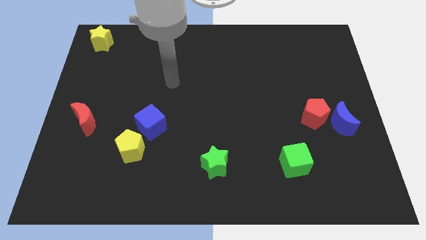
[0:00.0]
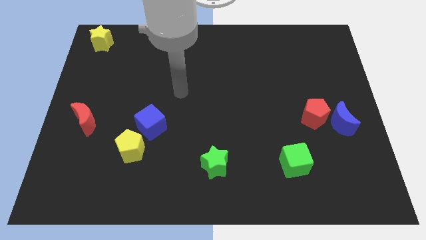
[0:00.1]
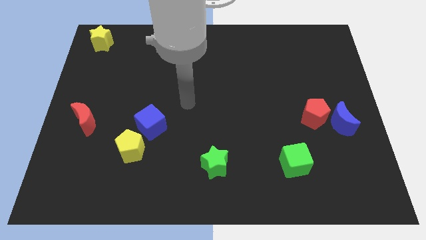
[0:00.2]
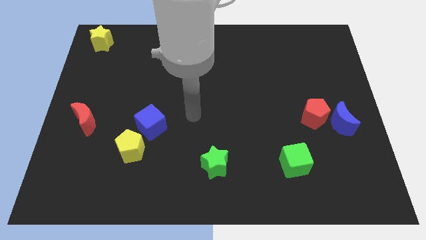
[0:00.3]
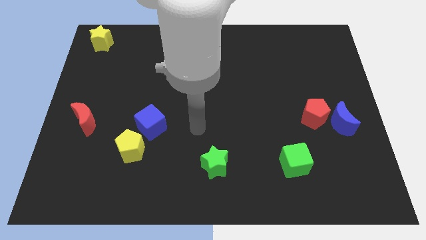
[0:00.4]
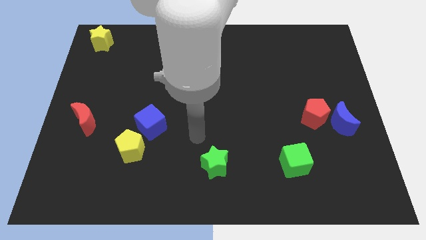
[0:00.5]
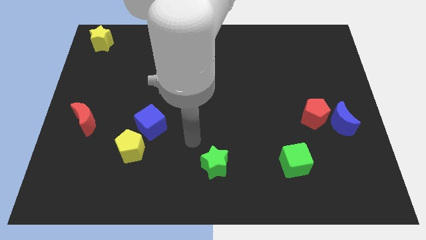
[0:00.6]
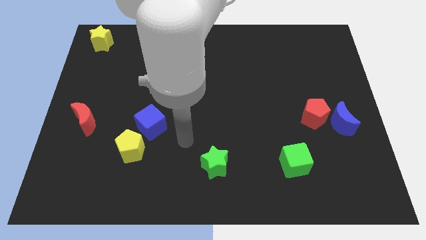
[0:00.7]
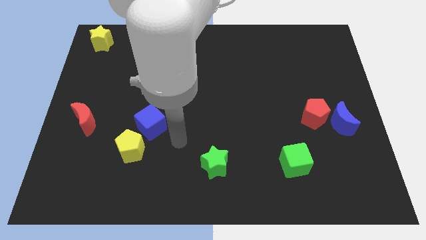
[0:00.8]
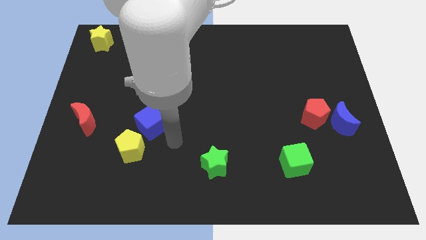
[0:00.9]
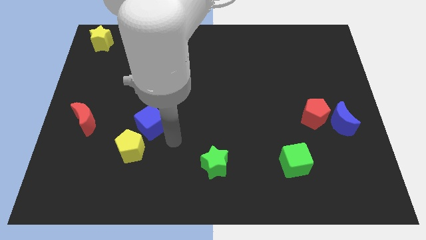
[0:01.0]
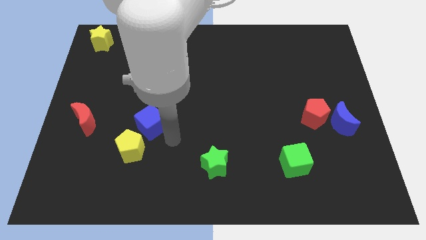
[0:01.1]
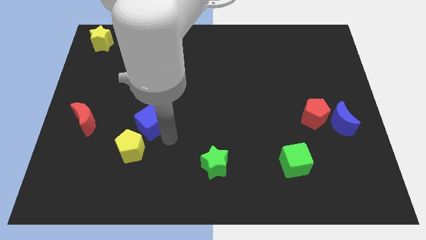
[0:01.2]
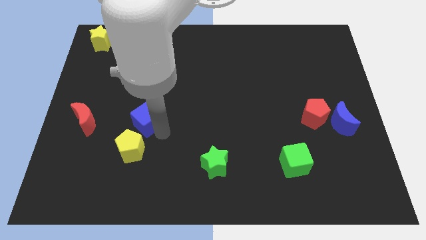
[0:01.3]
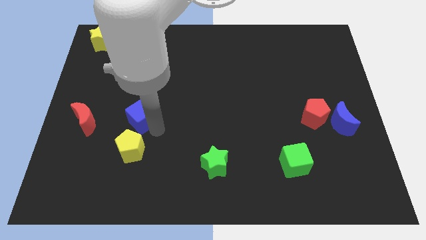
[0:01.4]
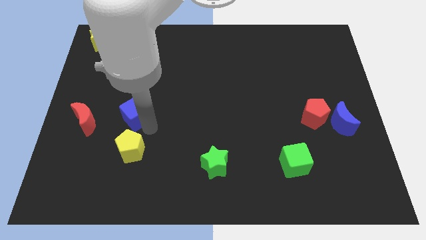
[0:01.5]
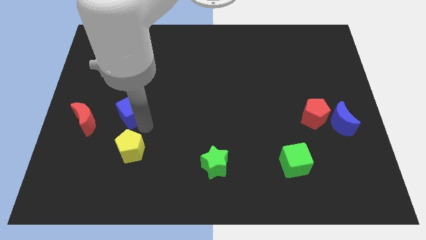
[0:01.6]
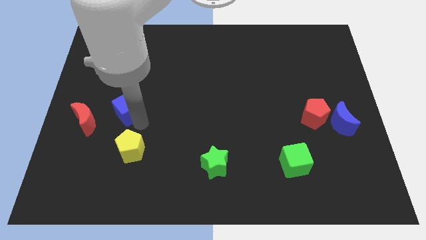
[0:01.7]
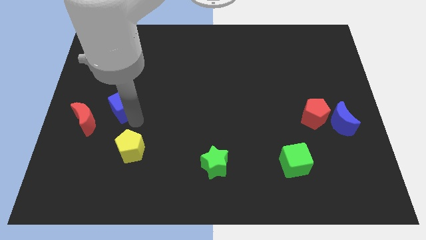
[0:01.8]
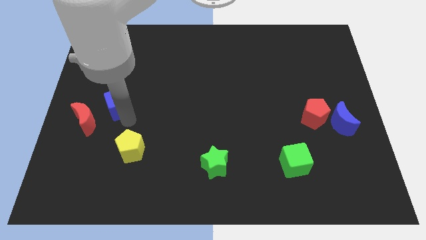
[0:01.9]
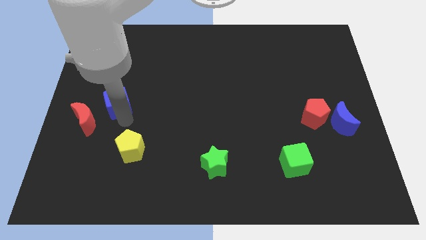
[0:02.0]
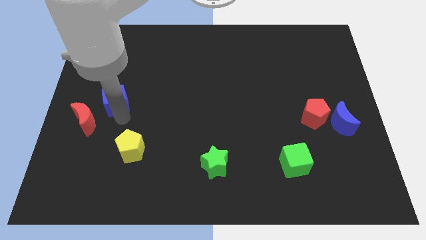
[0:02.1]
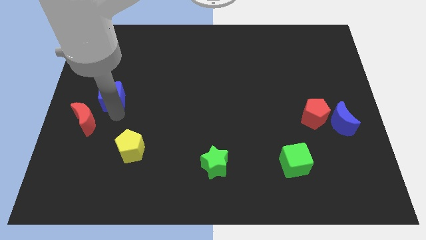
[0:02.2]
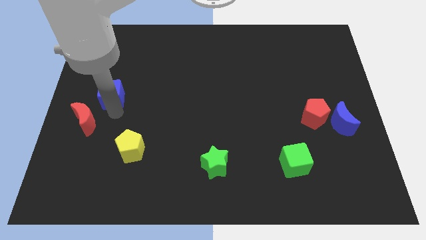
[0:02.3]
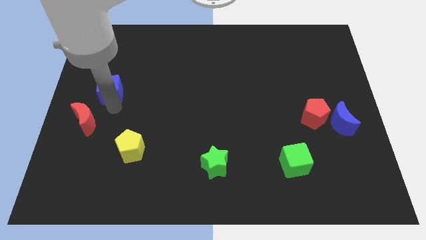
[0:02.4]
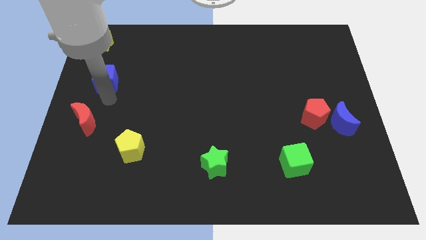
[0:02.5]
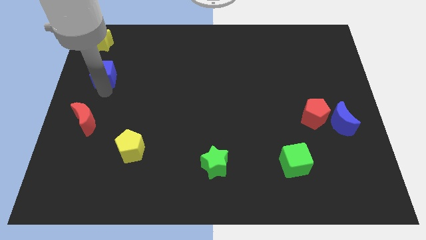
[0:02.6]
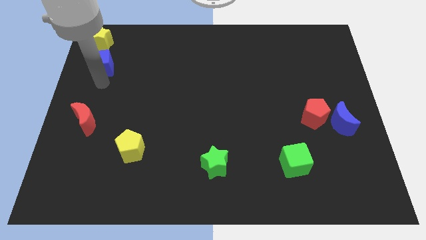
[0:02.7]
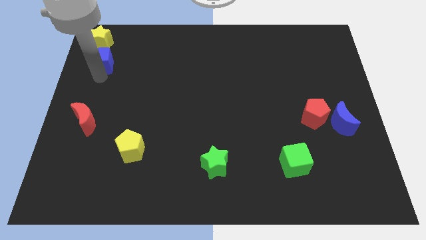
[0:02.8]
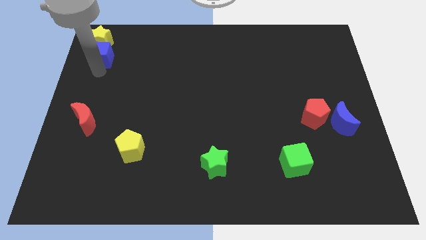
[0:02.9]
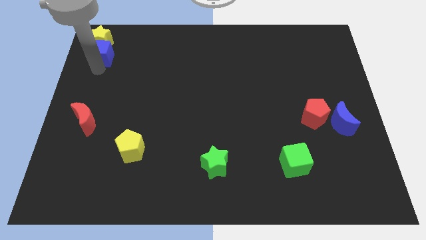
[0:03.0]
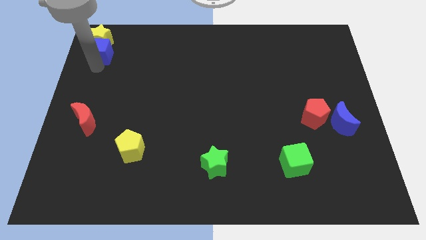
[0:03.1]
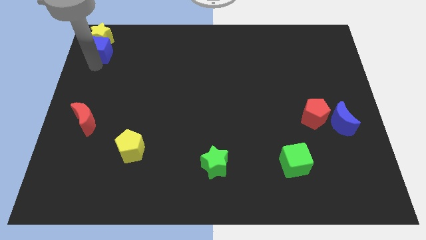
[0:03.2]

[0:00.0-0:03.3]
push the blue cube into the yellow star

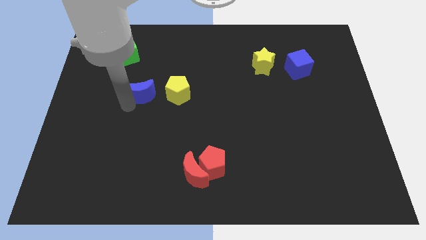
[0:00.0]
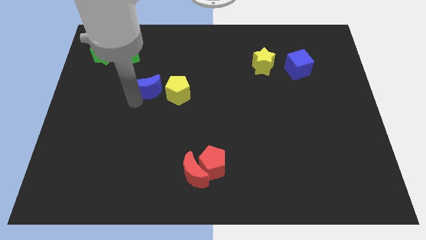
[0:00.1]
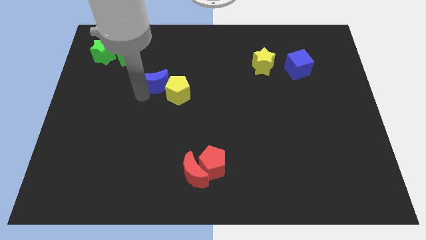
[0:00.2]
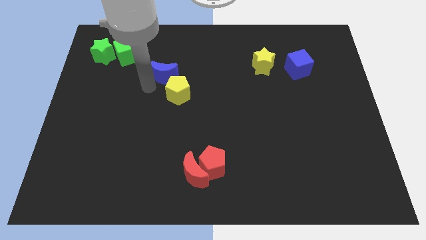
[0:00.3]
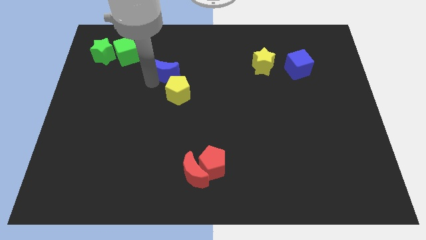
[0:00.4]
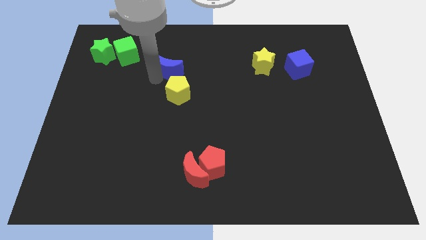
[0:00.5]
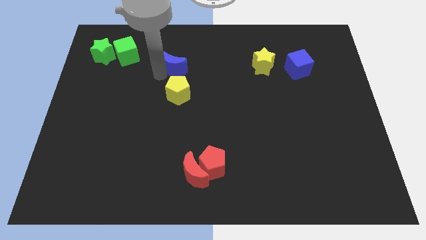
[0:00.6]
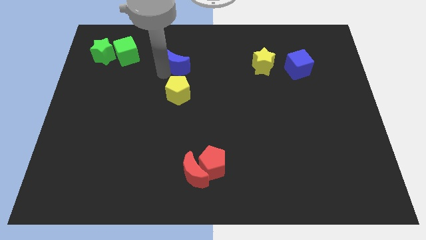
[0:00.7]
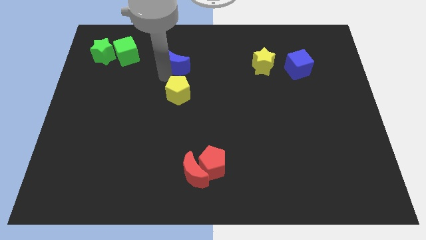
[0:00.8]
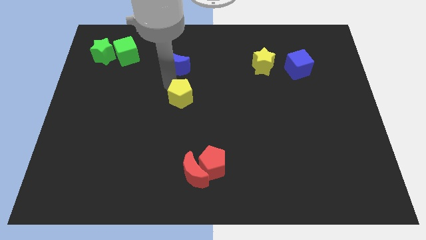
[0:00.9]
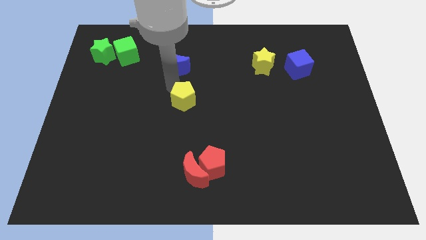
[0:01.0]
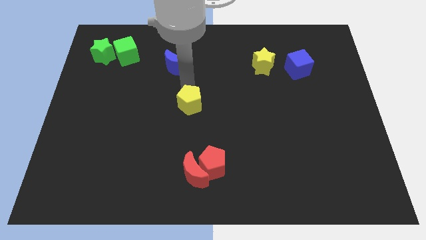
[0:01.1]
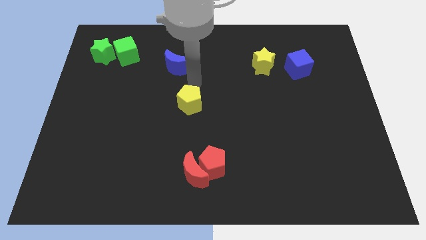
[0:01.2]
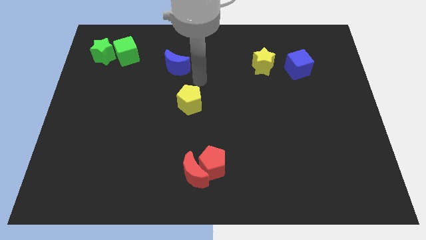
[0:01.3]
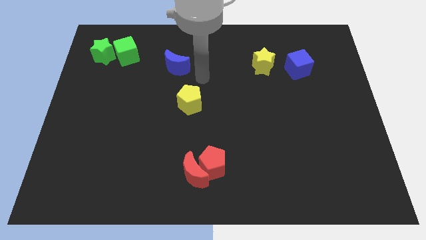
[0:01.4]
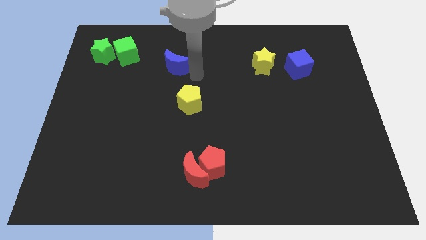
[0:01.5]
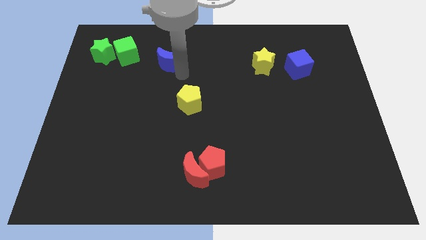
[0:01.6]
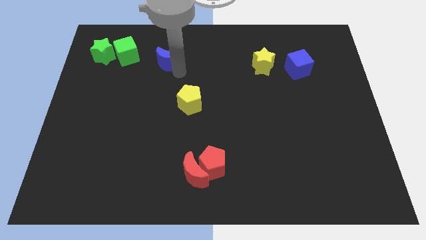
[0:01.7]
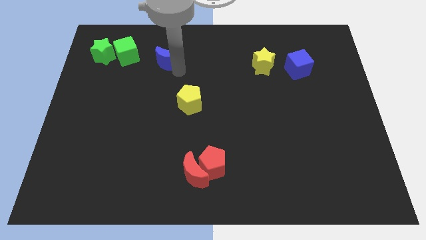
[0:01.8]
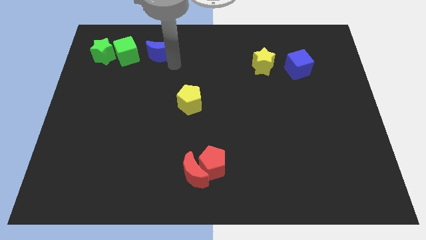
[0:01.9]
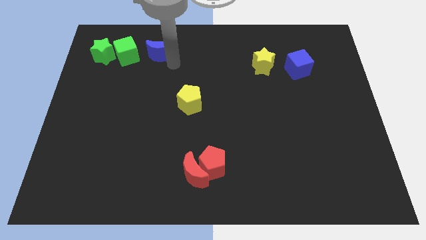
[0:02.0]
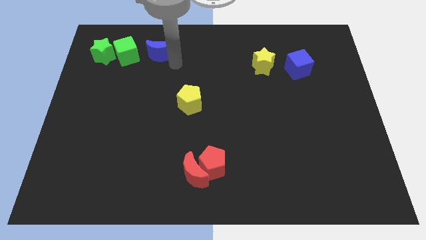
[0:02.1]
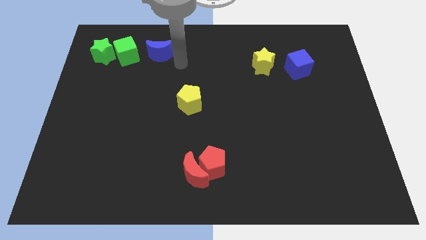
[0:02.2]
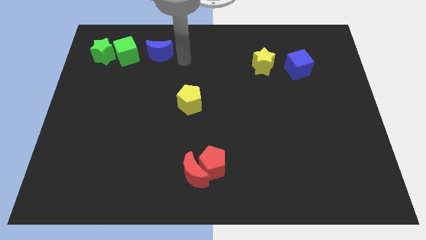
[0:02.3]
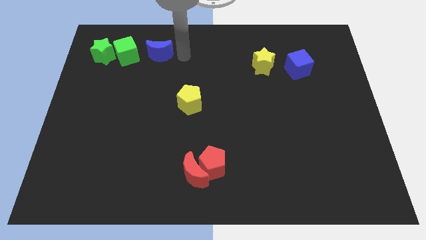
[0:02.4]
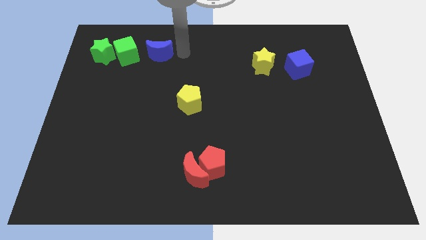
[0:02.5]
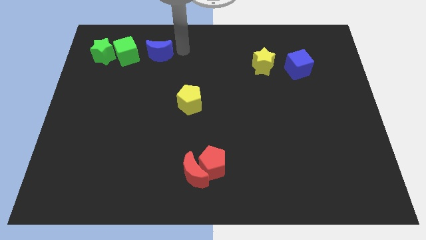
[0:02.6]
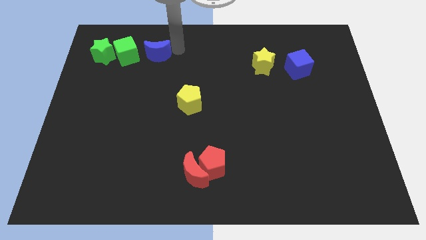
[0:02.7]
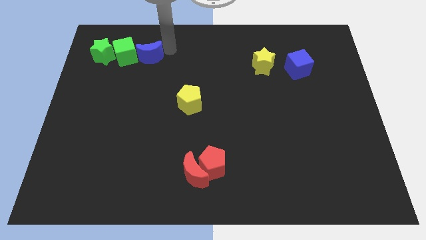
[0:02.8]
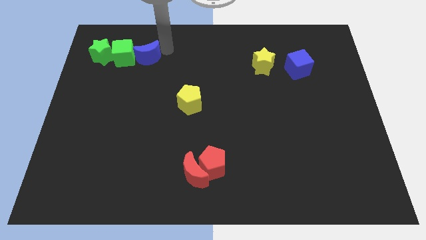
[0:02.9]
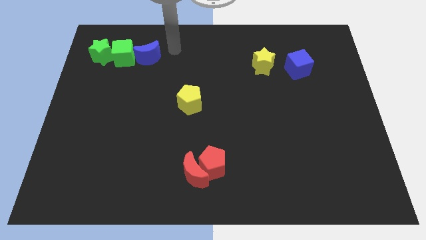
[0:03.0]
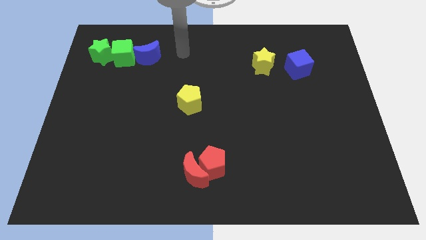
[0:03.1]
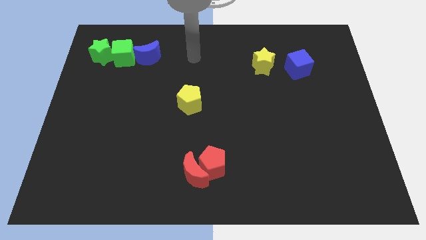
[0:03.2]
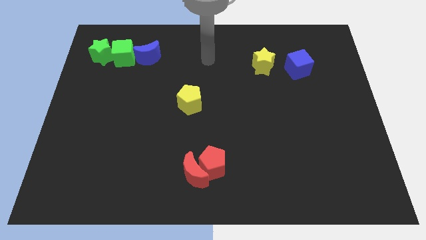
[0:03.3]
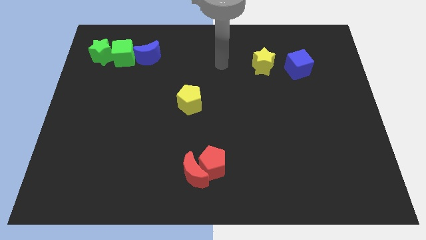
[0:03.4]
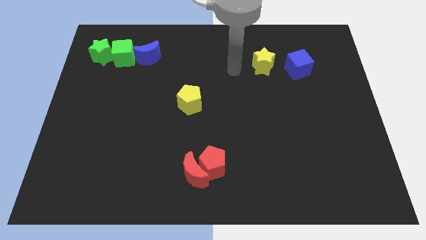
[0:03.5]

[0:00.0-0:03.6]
separate the blue moon from the yellow pentagon

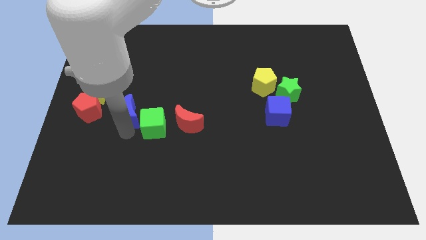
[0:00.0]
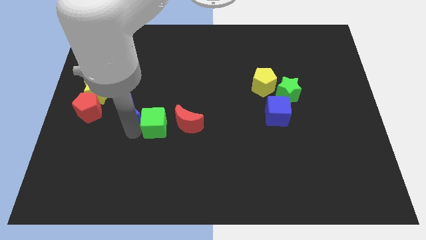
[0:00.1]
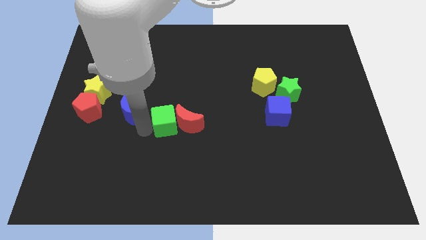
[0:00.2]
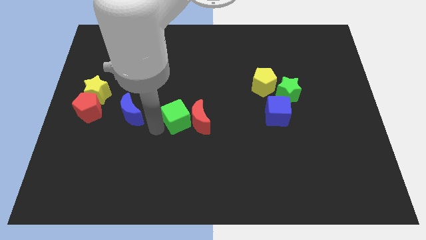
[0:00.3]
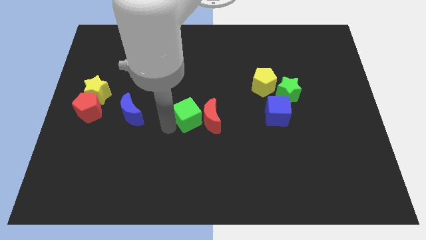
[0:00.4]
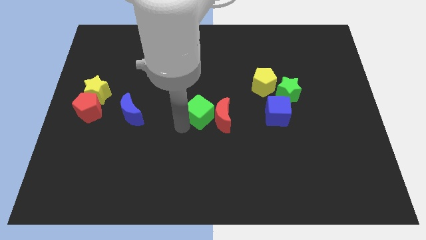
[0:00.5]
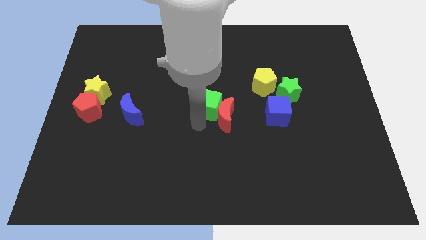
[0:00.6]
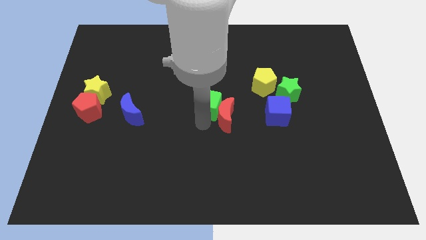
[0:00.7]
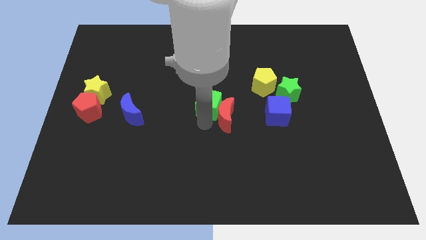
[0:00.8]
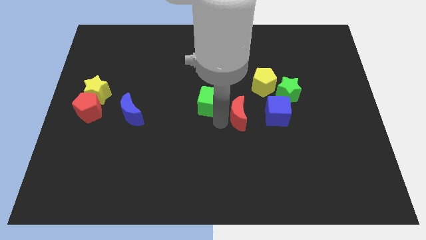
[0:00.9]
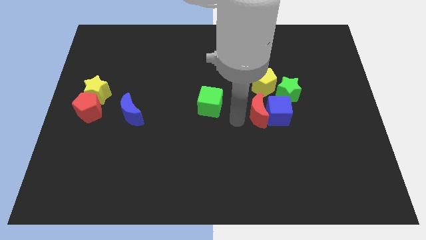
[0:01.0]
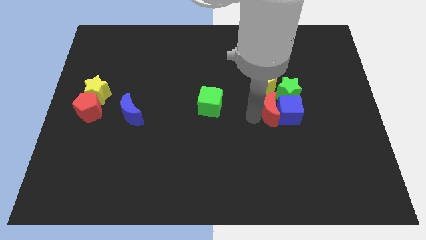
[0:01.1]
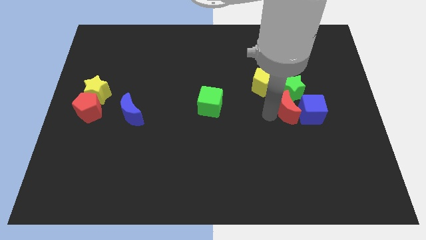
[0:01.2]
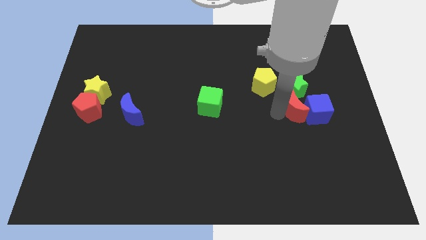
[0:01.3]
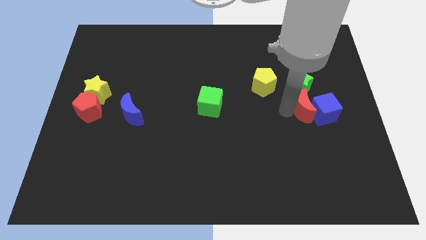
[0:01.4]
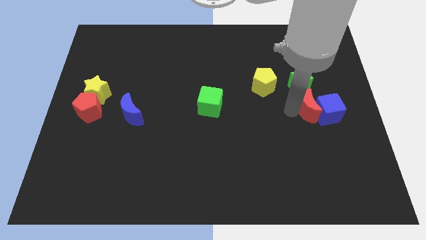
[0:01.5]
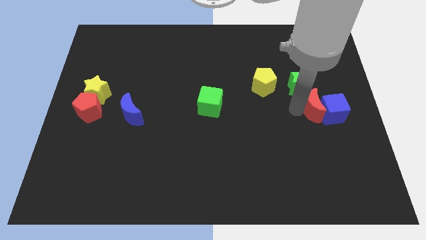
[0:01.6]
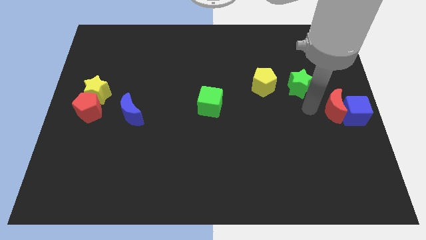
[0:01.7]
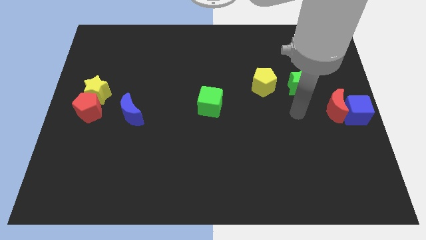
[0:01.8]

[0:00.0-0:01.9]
move red crescent towards the right center
